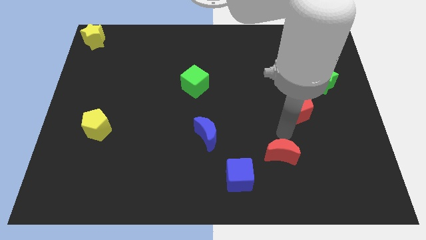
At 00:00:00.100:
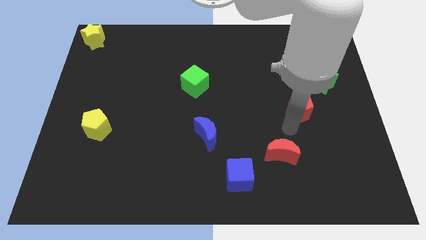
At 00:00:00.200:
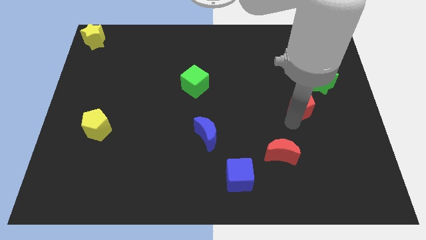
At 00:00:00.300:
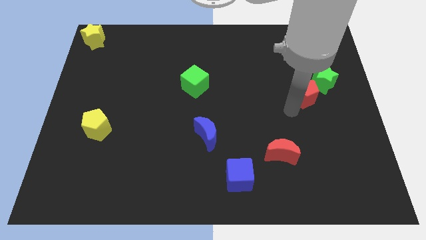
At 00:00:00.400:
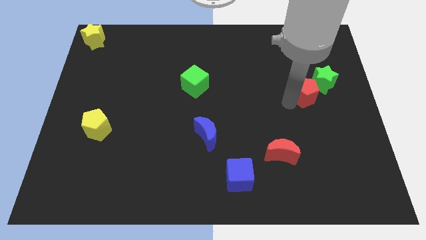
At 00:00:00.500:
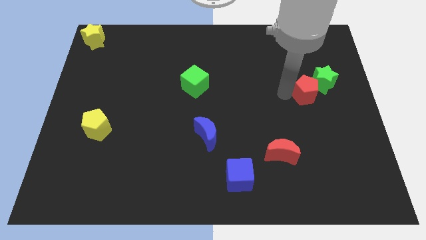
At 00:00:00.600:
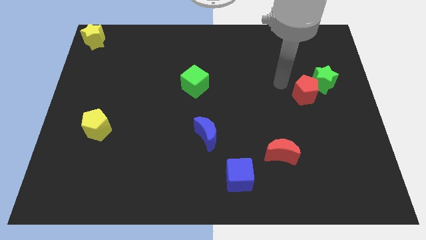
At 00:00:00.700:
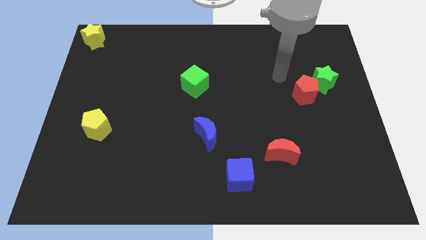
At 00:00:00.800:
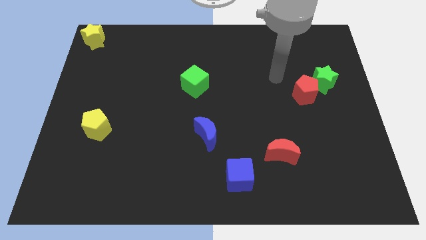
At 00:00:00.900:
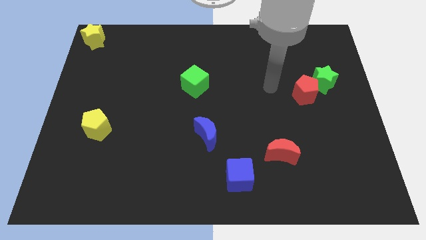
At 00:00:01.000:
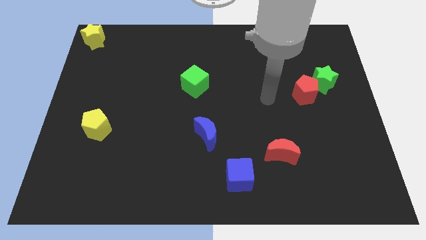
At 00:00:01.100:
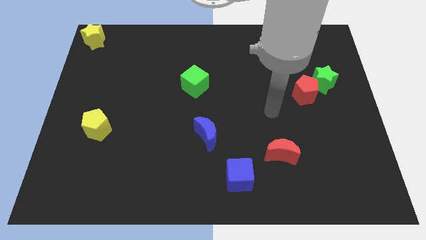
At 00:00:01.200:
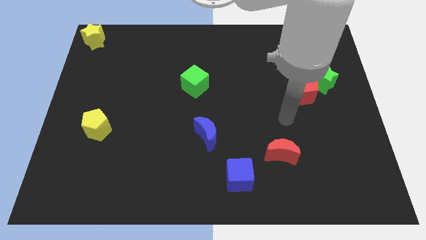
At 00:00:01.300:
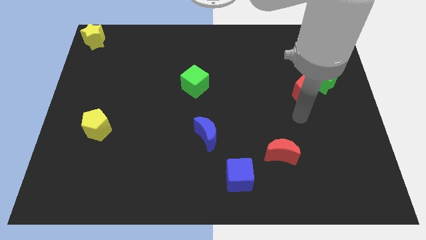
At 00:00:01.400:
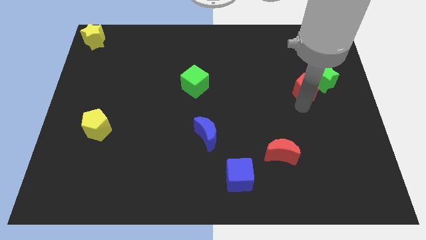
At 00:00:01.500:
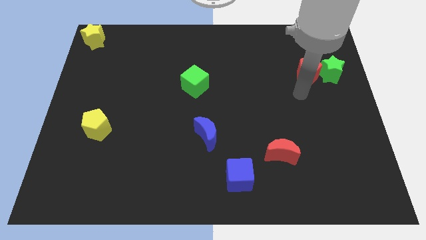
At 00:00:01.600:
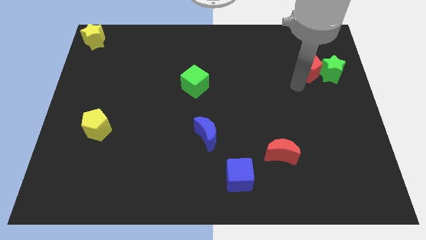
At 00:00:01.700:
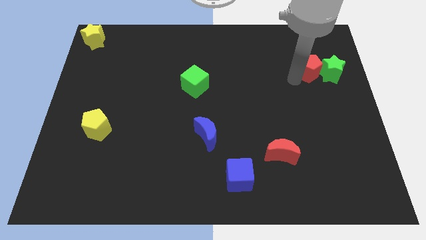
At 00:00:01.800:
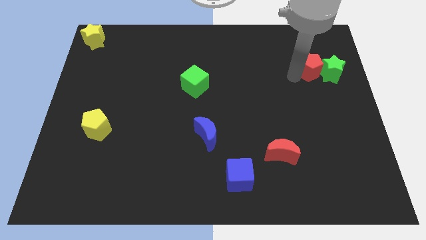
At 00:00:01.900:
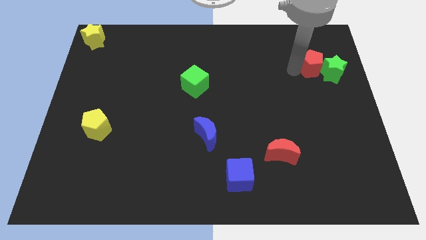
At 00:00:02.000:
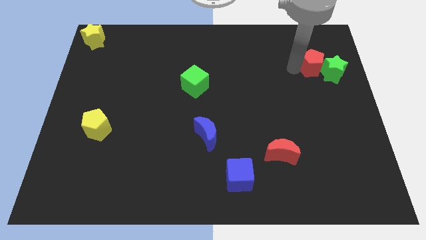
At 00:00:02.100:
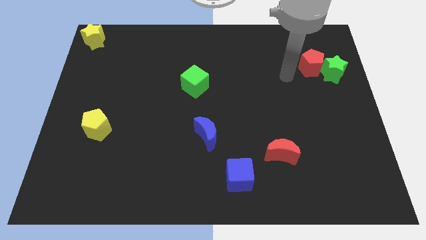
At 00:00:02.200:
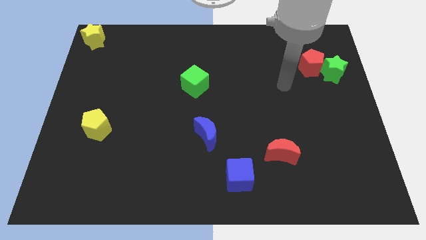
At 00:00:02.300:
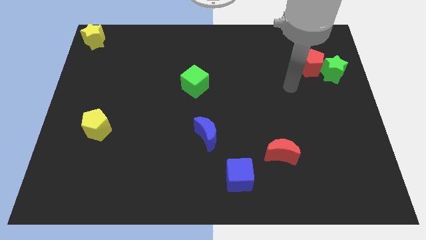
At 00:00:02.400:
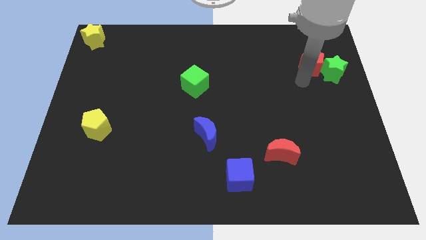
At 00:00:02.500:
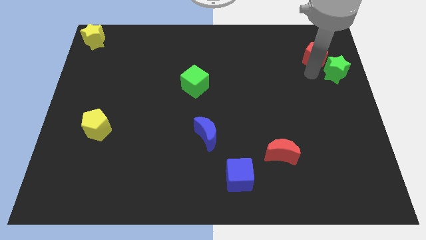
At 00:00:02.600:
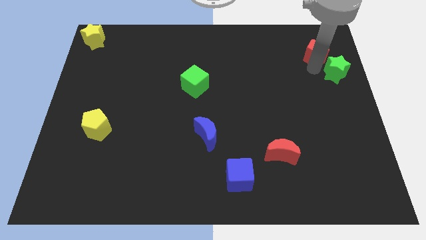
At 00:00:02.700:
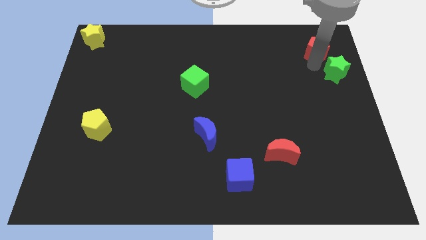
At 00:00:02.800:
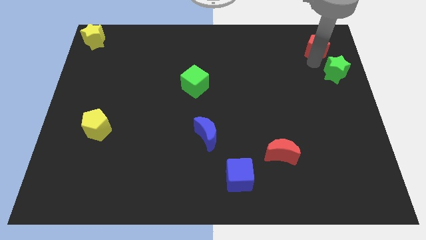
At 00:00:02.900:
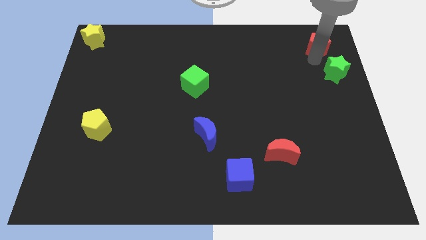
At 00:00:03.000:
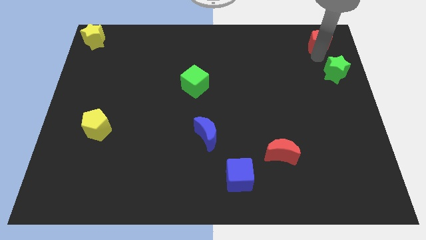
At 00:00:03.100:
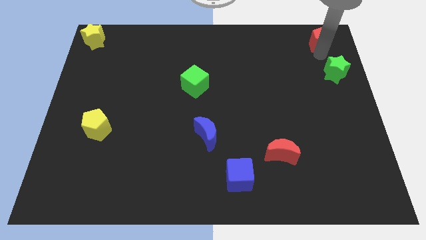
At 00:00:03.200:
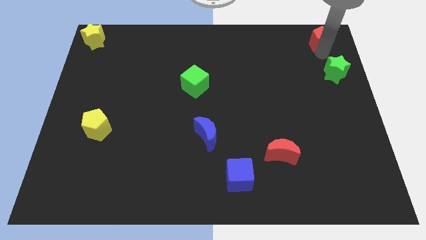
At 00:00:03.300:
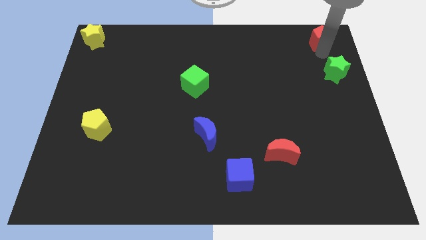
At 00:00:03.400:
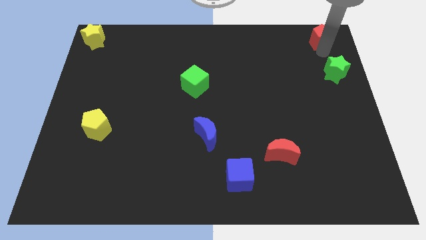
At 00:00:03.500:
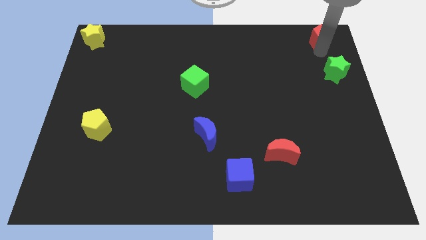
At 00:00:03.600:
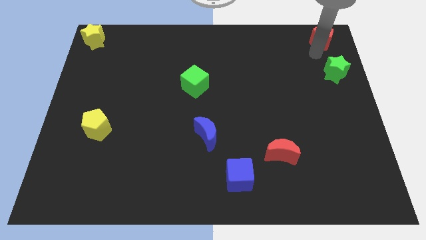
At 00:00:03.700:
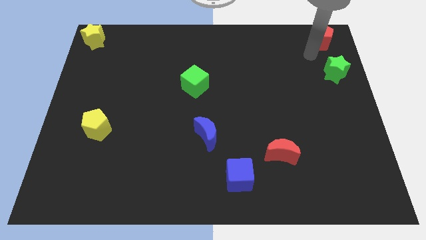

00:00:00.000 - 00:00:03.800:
push the red pentagon to the top right corner of the board

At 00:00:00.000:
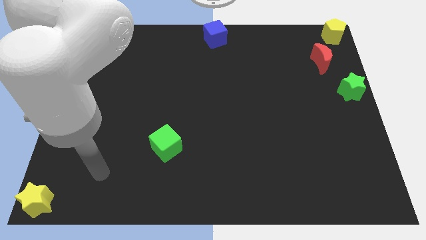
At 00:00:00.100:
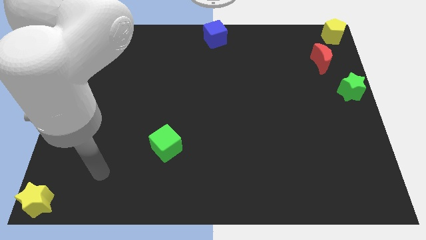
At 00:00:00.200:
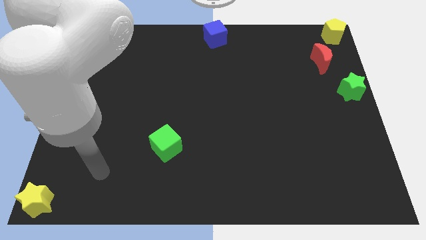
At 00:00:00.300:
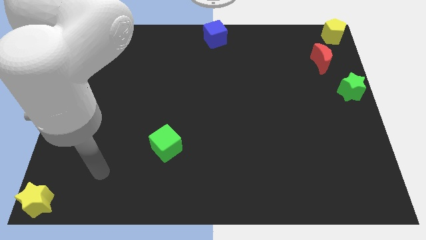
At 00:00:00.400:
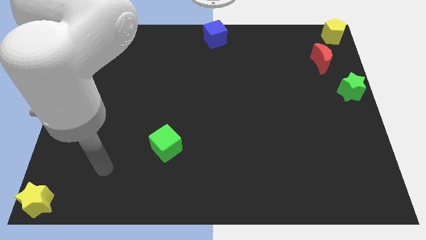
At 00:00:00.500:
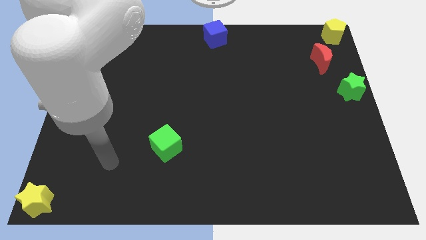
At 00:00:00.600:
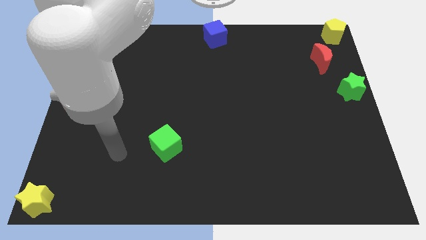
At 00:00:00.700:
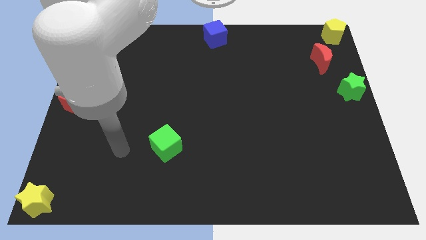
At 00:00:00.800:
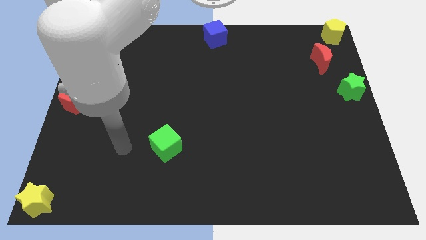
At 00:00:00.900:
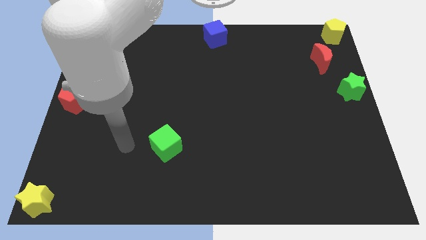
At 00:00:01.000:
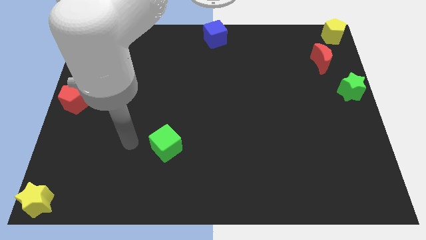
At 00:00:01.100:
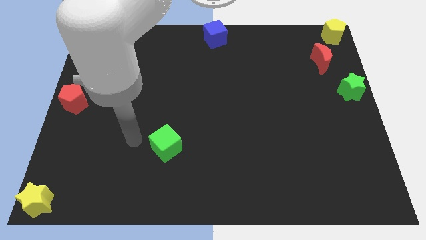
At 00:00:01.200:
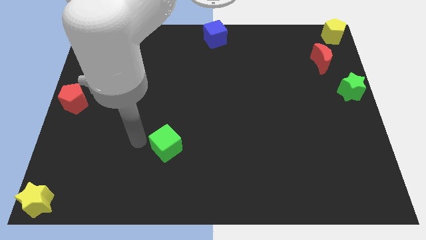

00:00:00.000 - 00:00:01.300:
point your arm at the top left side of green cube

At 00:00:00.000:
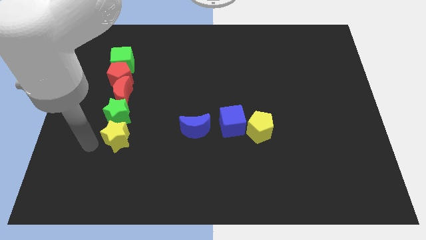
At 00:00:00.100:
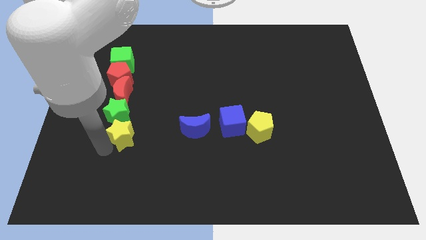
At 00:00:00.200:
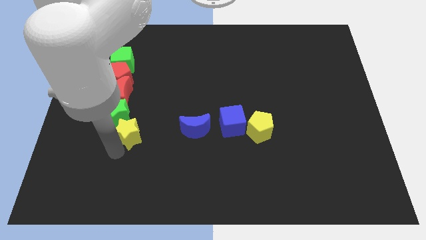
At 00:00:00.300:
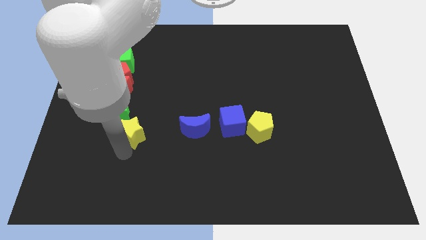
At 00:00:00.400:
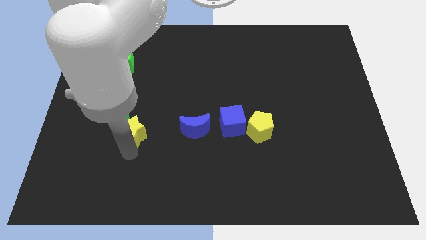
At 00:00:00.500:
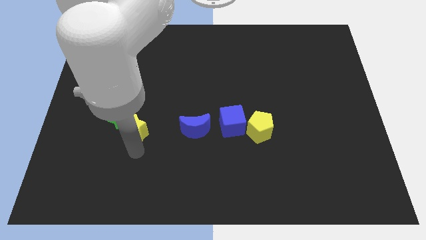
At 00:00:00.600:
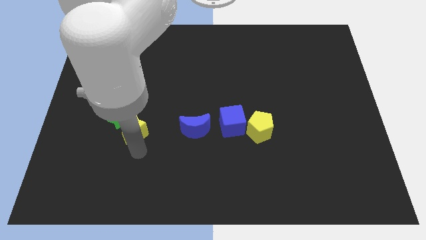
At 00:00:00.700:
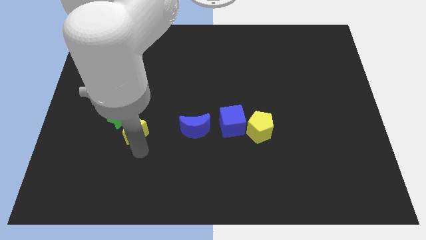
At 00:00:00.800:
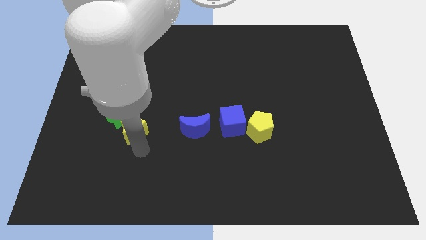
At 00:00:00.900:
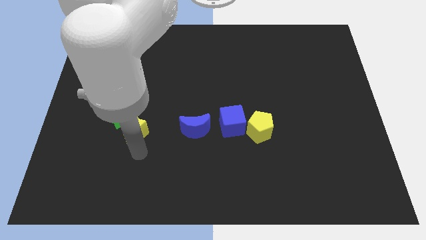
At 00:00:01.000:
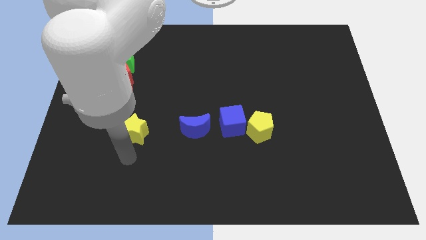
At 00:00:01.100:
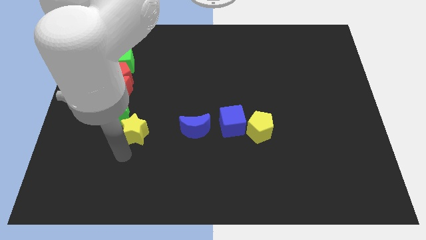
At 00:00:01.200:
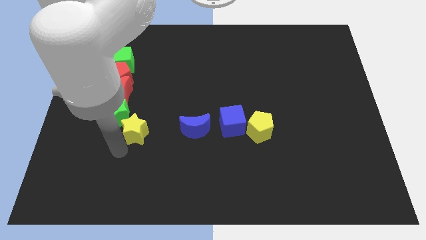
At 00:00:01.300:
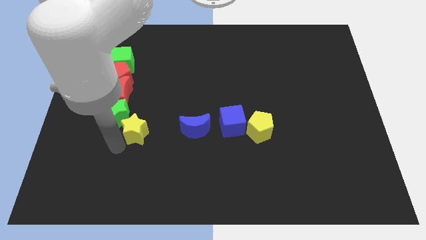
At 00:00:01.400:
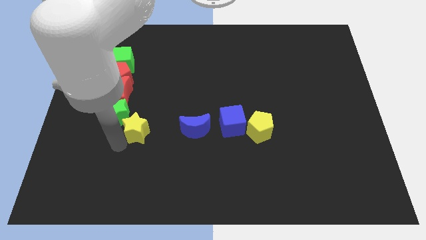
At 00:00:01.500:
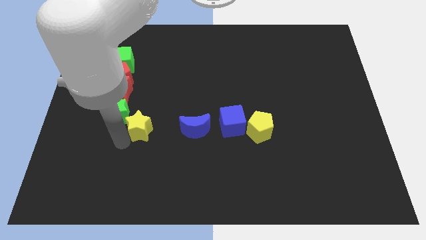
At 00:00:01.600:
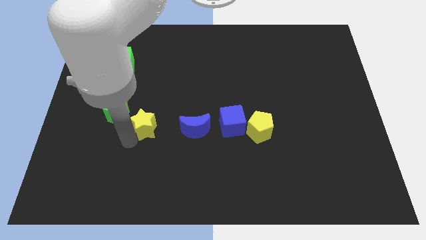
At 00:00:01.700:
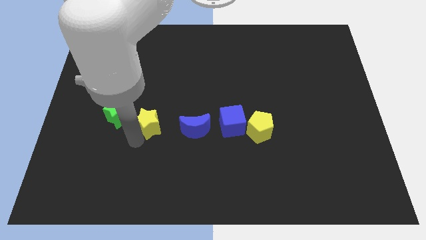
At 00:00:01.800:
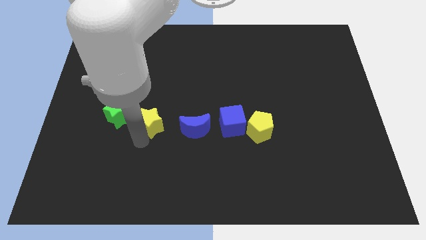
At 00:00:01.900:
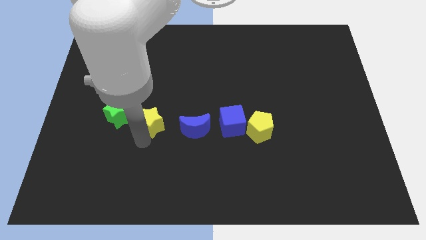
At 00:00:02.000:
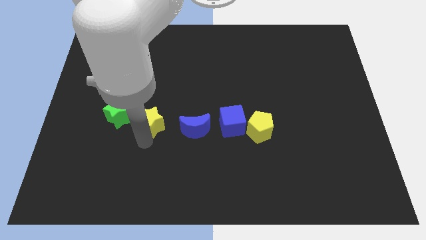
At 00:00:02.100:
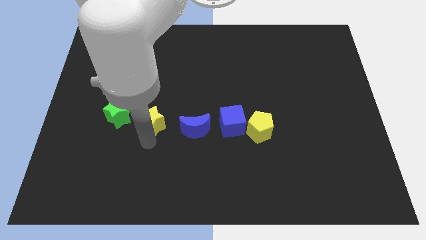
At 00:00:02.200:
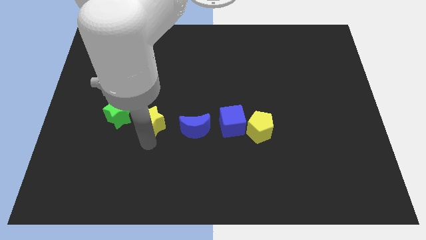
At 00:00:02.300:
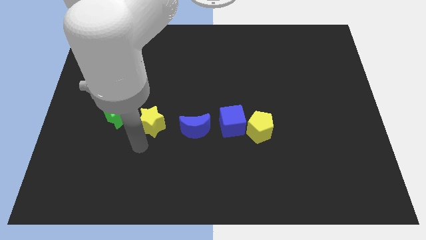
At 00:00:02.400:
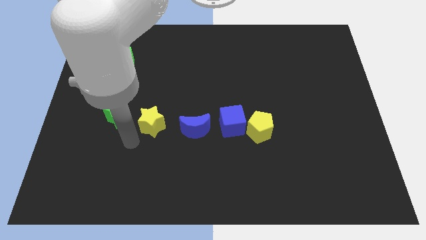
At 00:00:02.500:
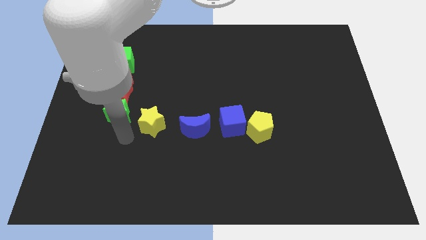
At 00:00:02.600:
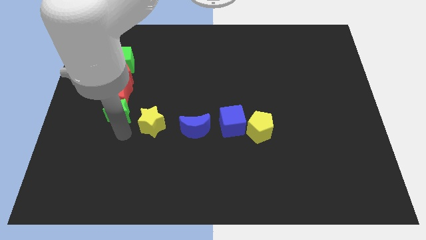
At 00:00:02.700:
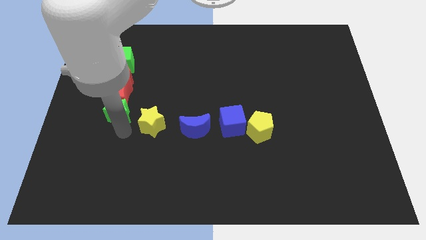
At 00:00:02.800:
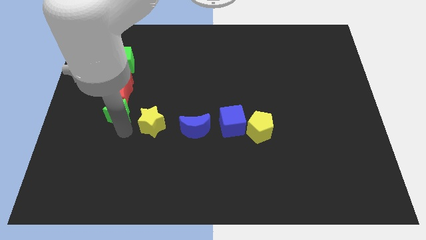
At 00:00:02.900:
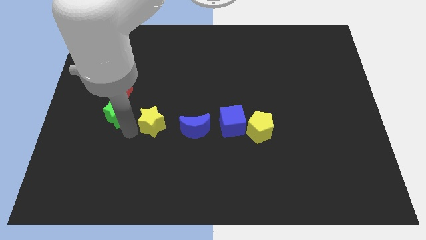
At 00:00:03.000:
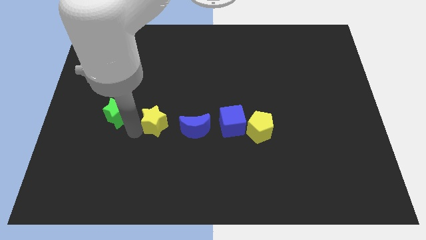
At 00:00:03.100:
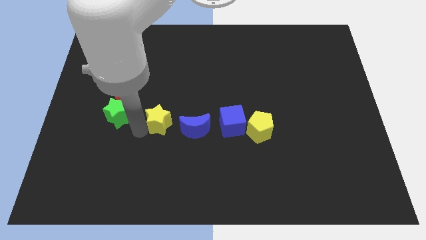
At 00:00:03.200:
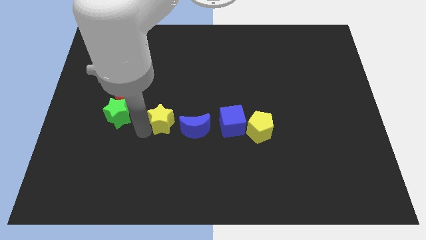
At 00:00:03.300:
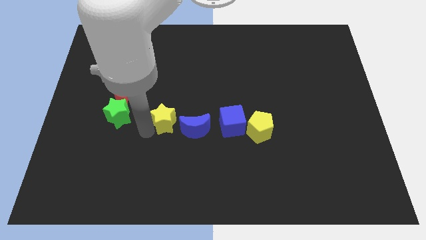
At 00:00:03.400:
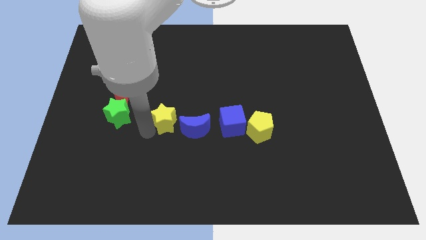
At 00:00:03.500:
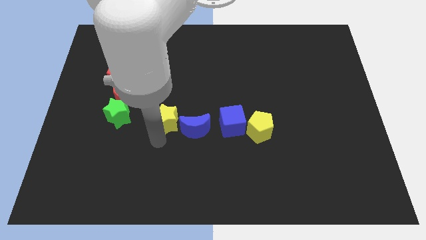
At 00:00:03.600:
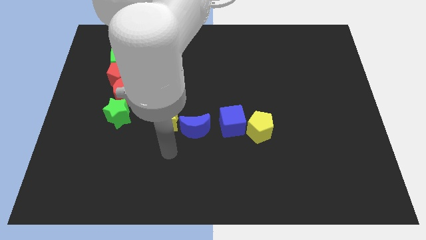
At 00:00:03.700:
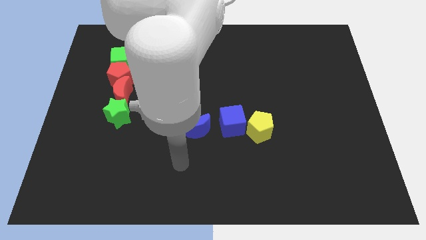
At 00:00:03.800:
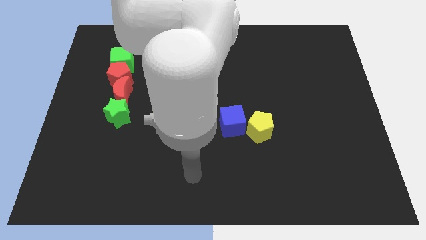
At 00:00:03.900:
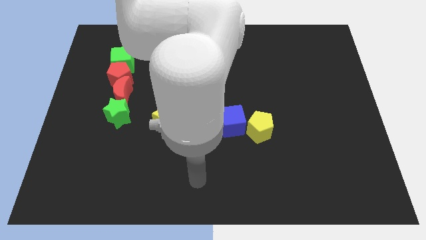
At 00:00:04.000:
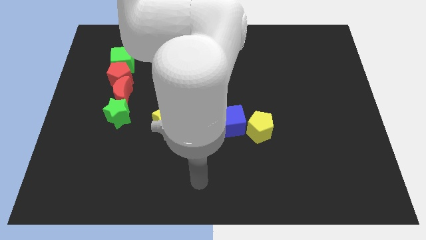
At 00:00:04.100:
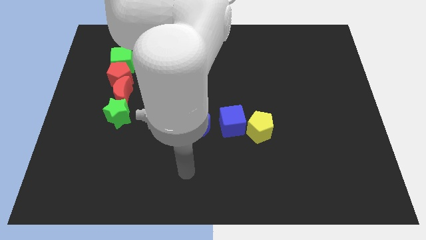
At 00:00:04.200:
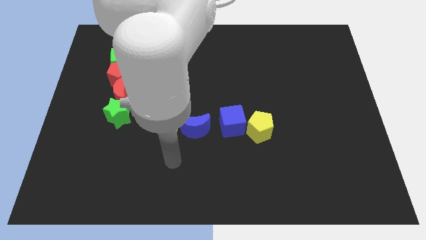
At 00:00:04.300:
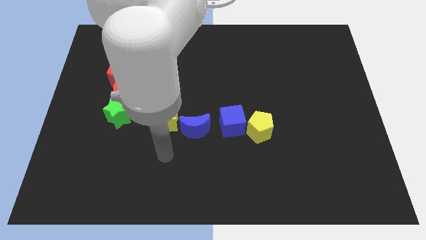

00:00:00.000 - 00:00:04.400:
push the yellow star to the left blue crescent
